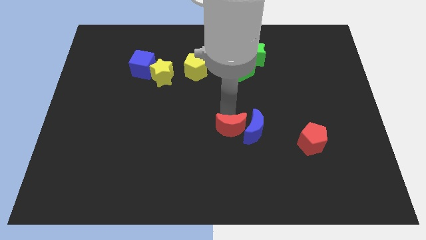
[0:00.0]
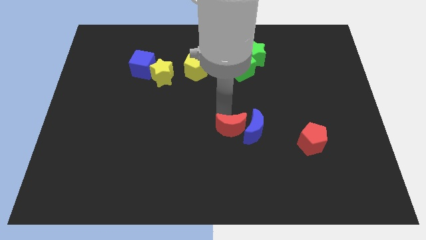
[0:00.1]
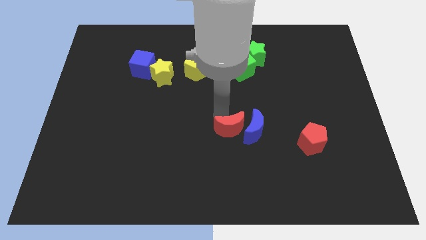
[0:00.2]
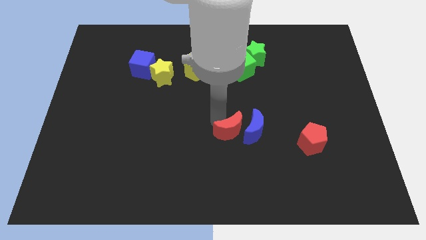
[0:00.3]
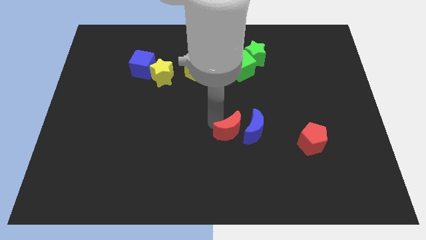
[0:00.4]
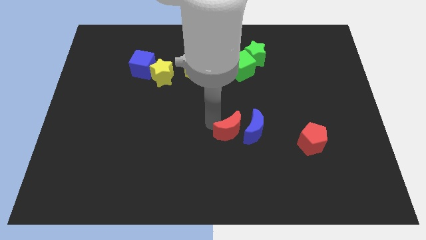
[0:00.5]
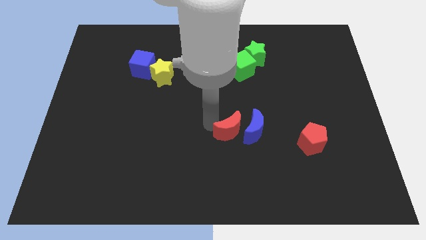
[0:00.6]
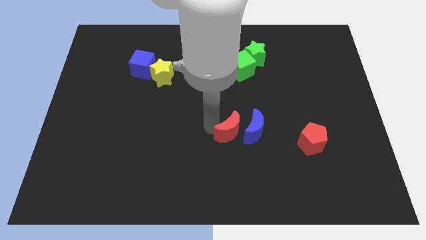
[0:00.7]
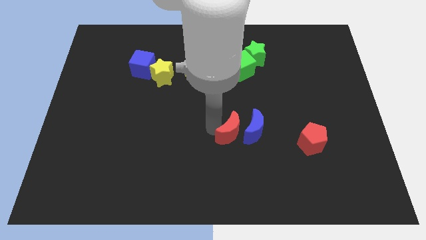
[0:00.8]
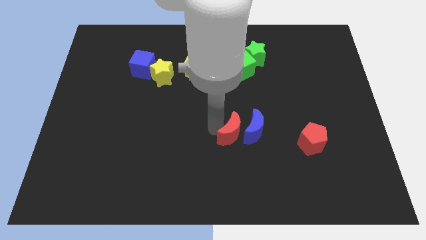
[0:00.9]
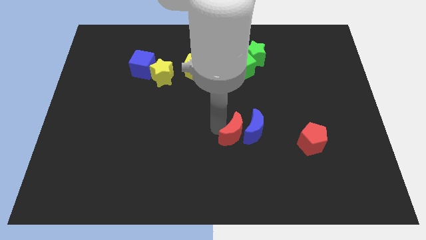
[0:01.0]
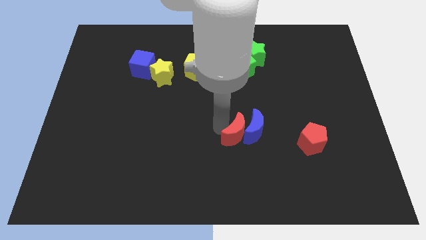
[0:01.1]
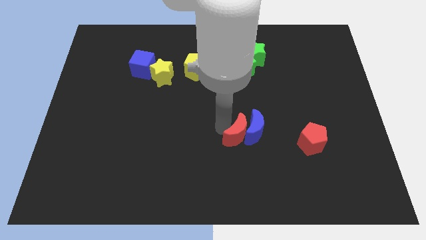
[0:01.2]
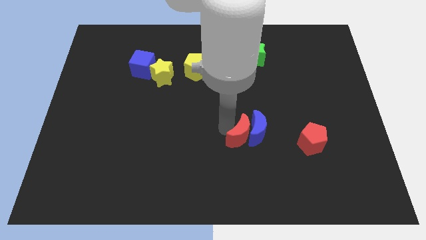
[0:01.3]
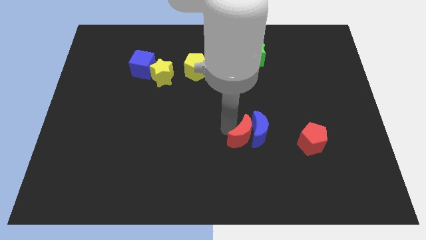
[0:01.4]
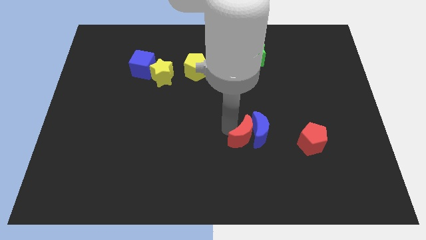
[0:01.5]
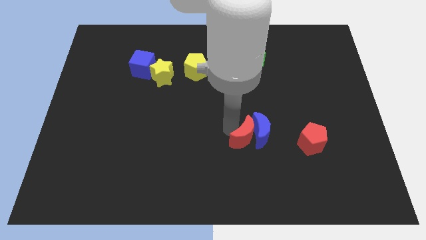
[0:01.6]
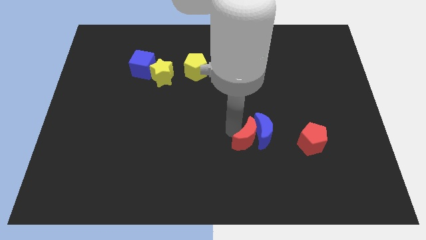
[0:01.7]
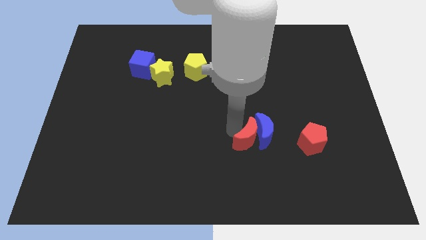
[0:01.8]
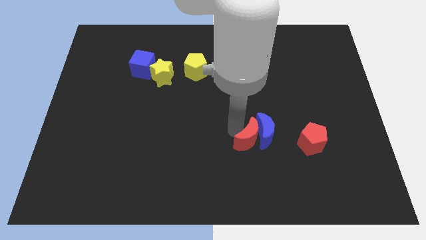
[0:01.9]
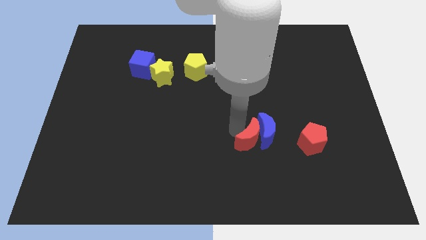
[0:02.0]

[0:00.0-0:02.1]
push the red and blue crescents towards the right side

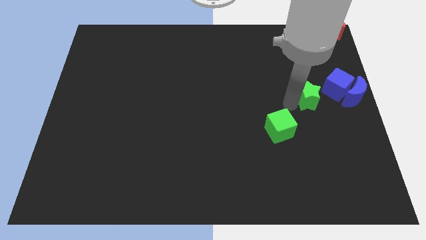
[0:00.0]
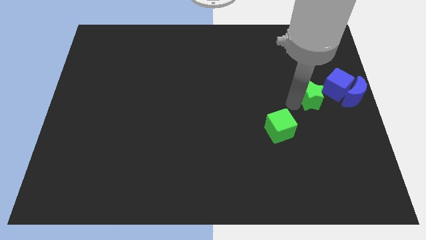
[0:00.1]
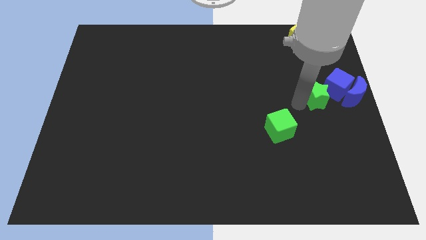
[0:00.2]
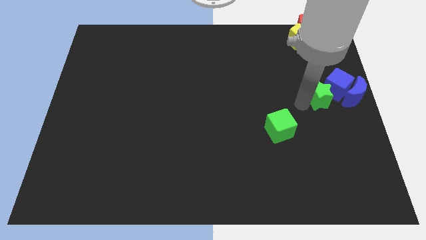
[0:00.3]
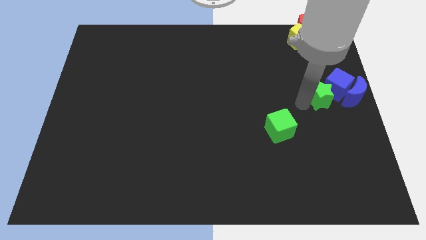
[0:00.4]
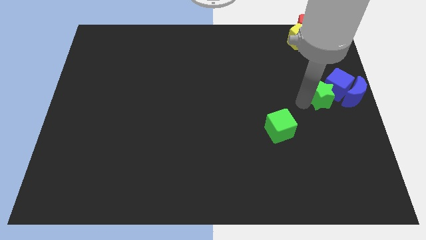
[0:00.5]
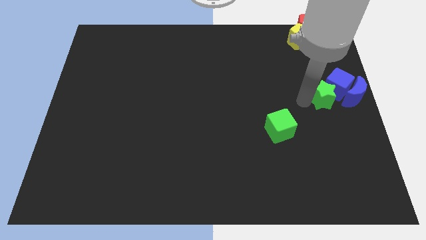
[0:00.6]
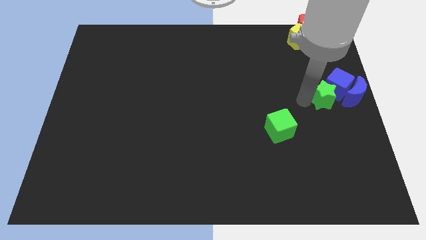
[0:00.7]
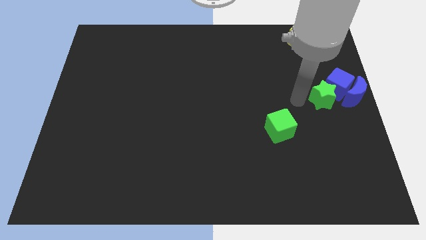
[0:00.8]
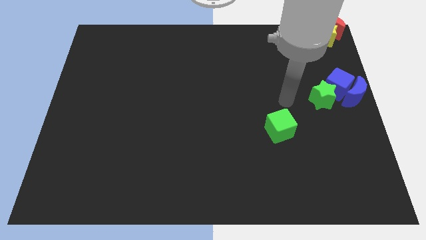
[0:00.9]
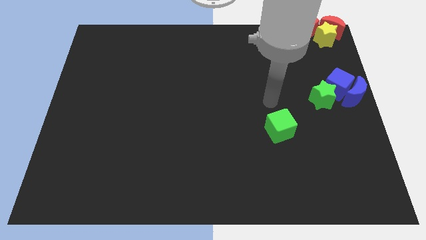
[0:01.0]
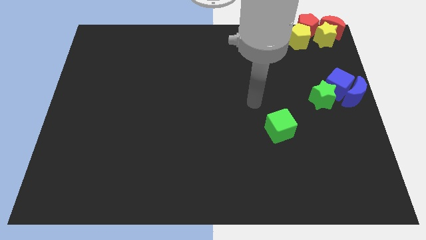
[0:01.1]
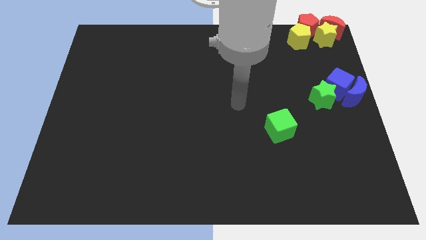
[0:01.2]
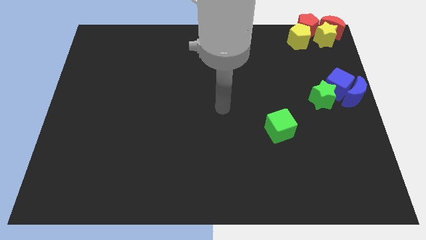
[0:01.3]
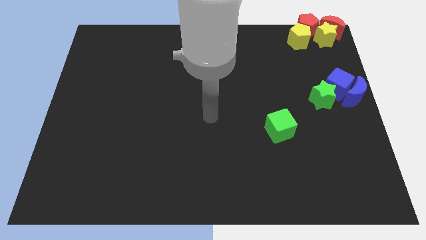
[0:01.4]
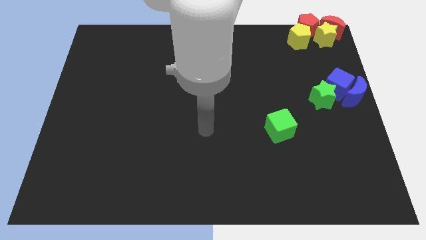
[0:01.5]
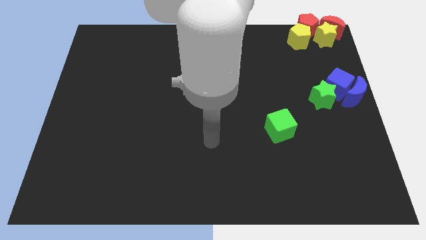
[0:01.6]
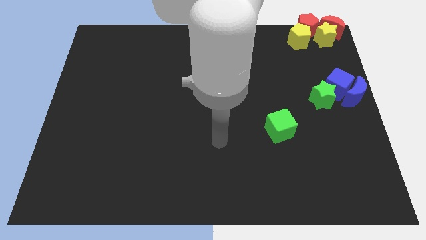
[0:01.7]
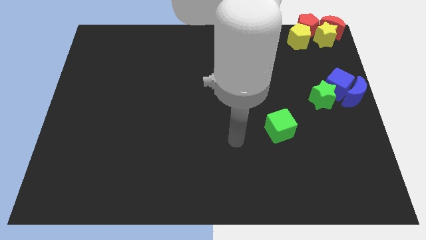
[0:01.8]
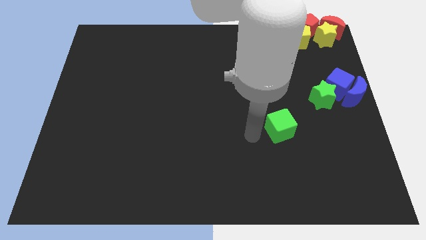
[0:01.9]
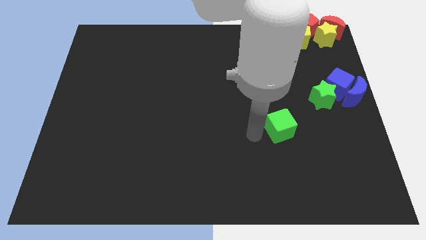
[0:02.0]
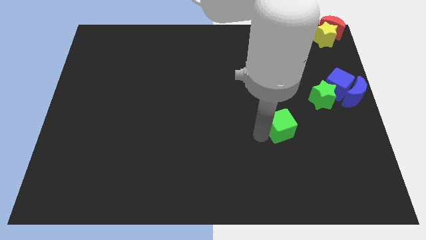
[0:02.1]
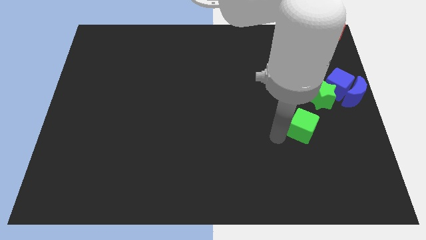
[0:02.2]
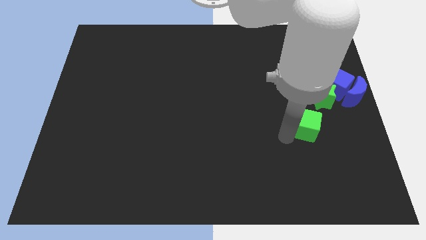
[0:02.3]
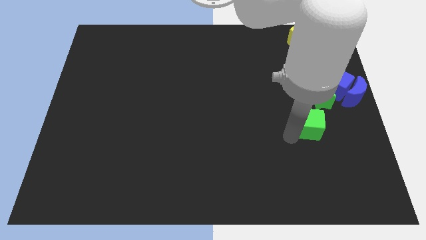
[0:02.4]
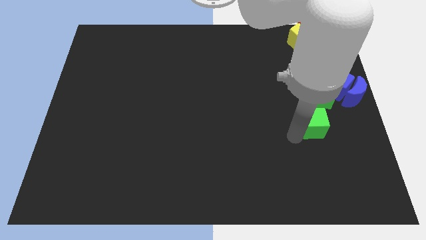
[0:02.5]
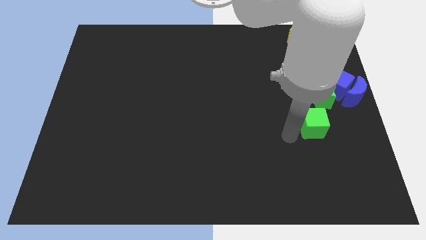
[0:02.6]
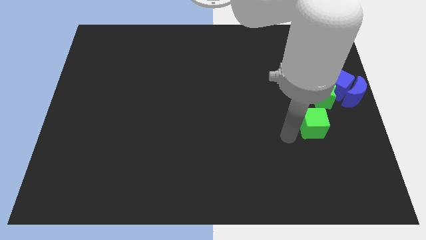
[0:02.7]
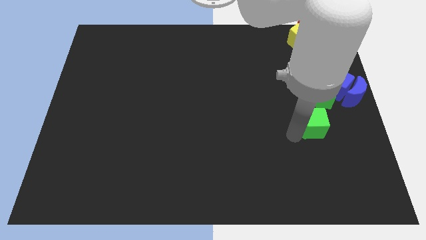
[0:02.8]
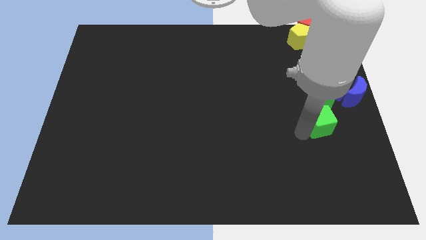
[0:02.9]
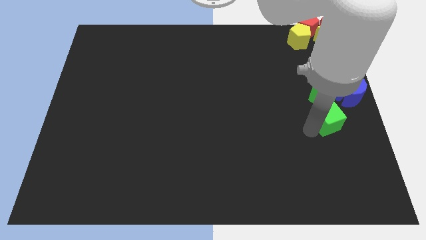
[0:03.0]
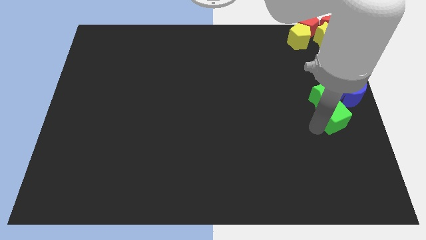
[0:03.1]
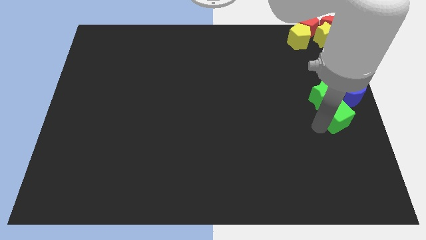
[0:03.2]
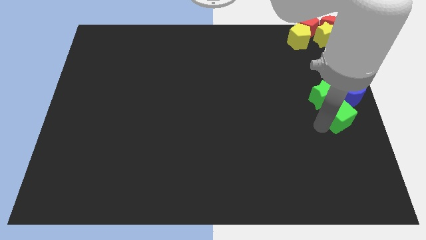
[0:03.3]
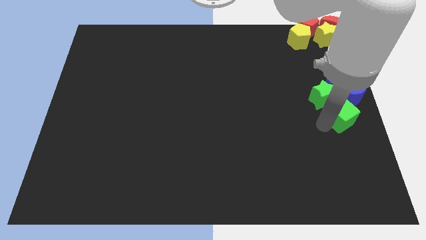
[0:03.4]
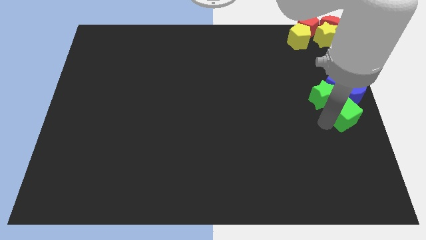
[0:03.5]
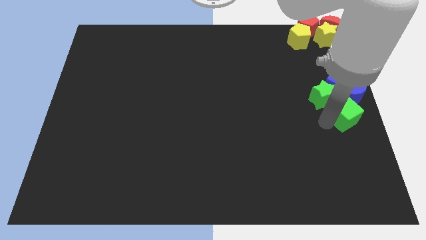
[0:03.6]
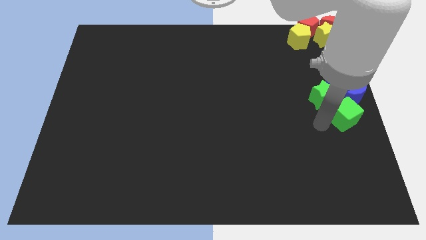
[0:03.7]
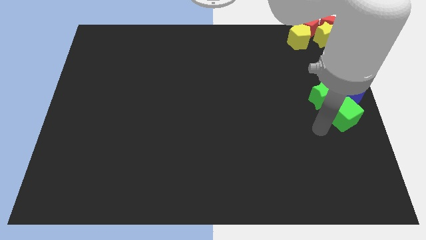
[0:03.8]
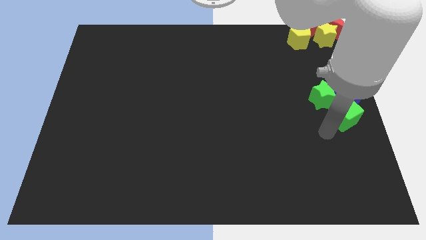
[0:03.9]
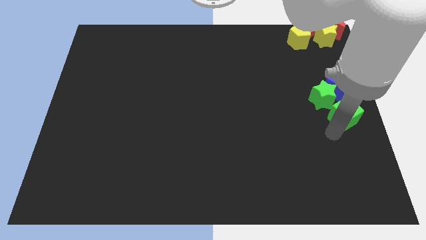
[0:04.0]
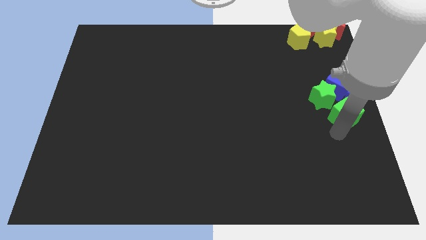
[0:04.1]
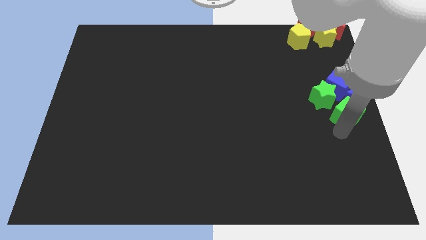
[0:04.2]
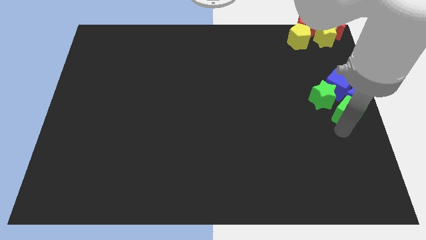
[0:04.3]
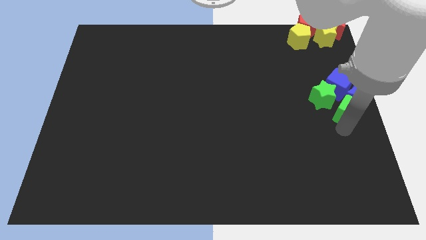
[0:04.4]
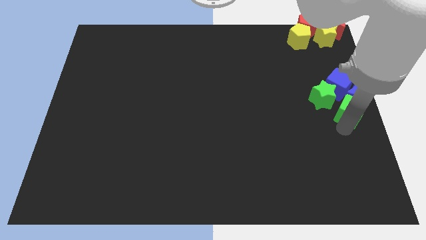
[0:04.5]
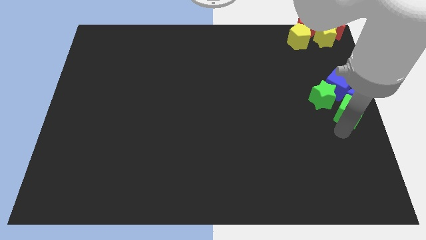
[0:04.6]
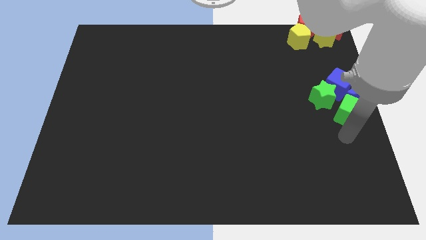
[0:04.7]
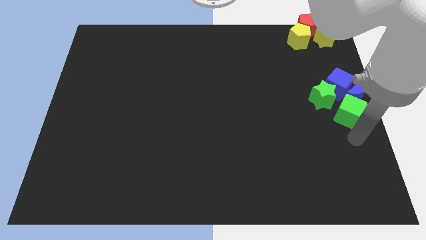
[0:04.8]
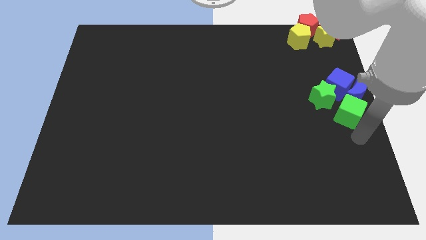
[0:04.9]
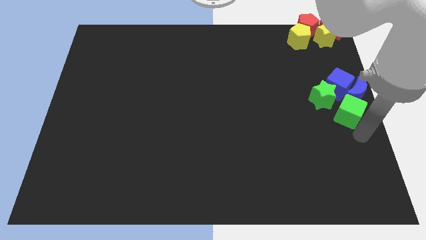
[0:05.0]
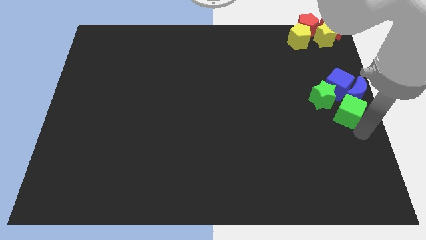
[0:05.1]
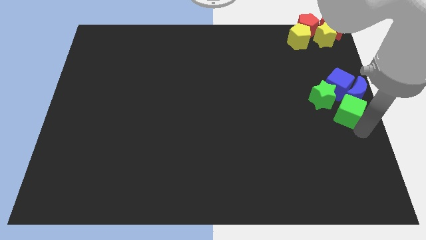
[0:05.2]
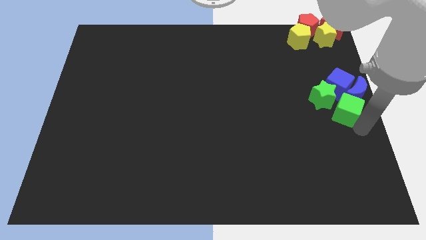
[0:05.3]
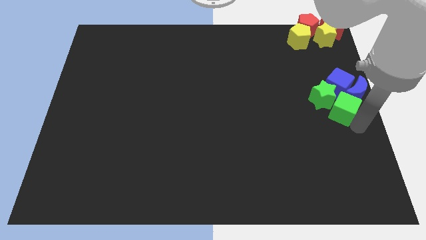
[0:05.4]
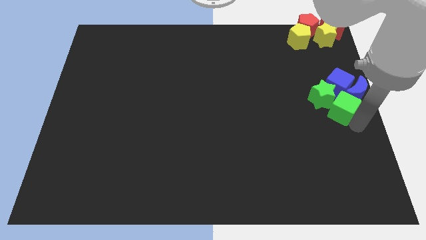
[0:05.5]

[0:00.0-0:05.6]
move the green cube into the group of object

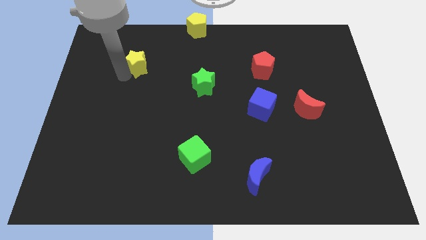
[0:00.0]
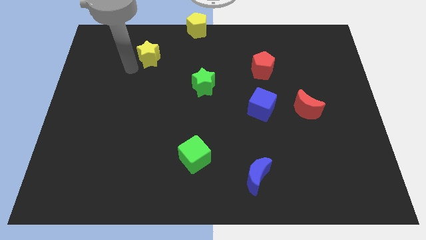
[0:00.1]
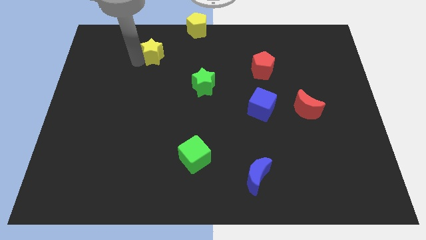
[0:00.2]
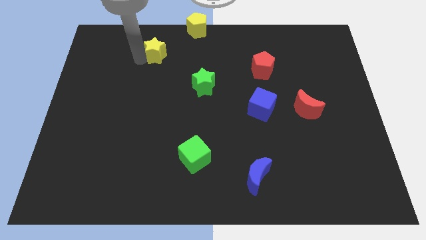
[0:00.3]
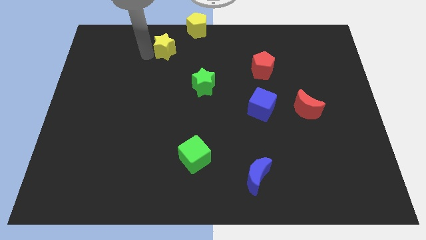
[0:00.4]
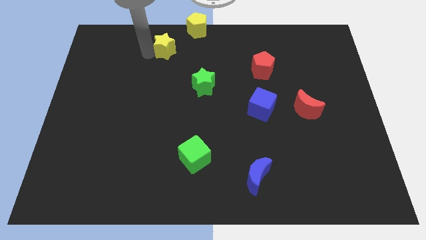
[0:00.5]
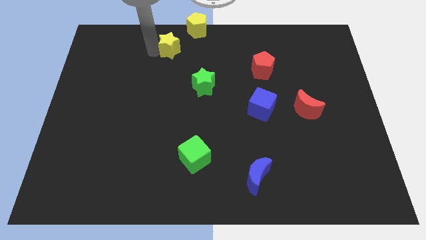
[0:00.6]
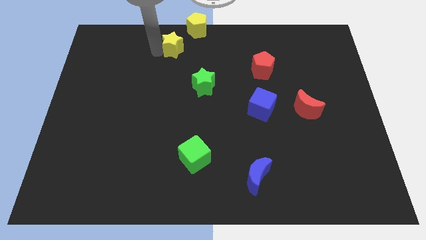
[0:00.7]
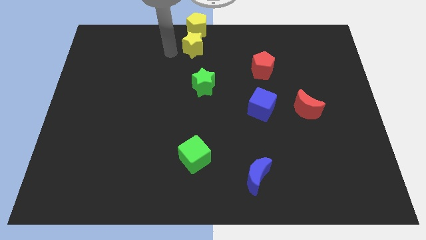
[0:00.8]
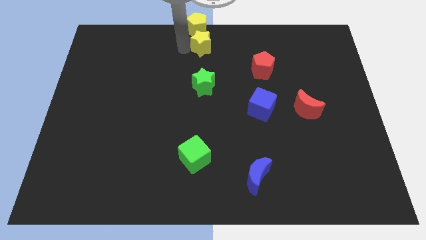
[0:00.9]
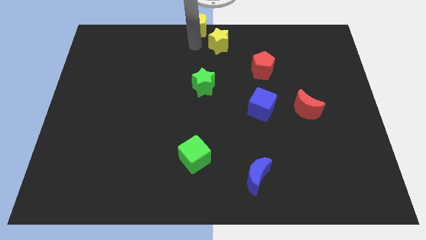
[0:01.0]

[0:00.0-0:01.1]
place the yellow star down to the yellow pentagon

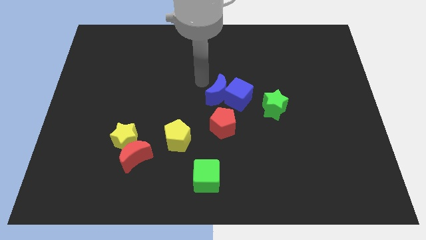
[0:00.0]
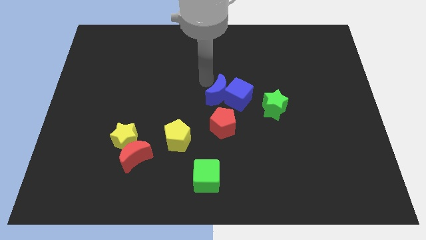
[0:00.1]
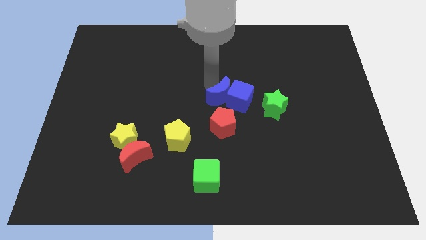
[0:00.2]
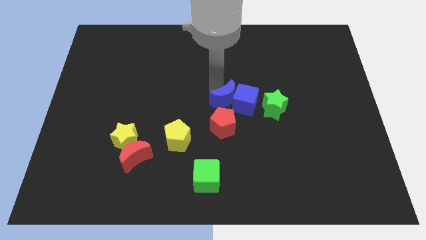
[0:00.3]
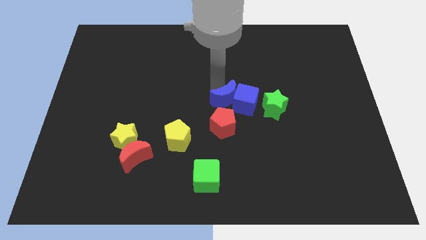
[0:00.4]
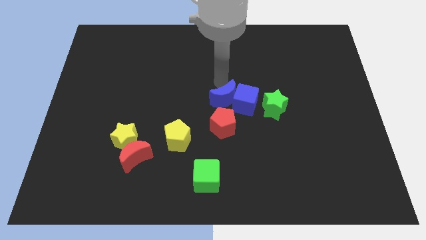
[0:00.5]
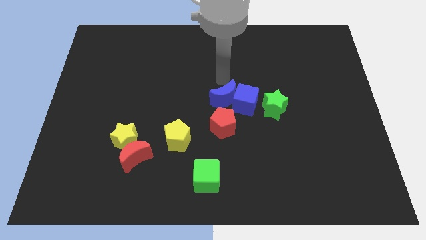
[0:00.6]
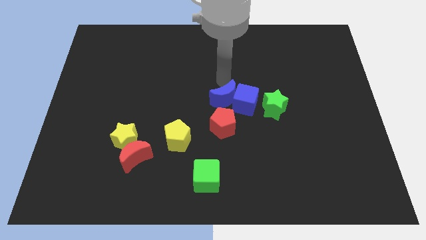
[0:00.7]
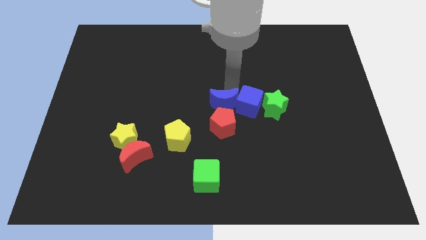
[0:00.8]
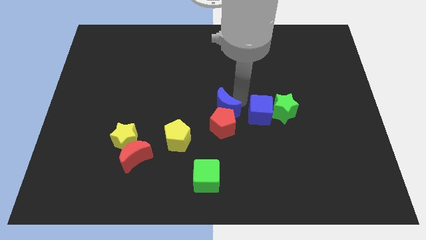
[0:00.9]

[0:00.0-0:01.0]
place the blue crescent above the red pentagon
